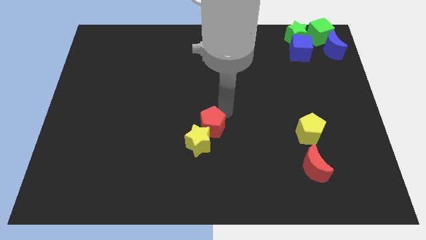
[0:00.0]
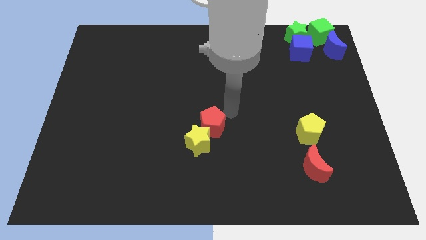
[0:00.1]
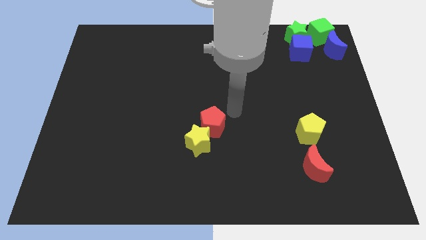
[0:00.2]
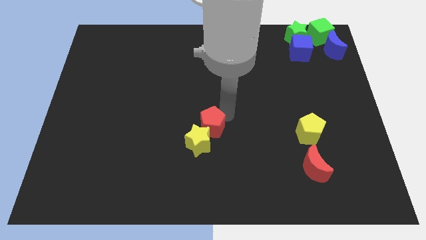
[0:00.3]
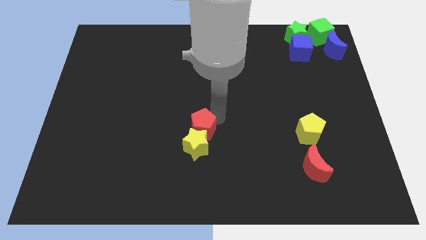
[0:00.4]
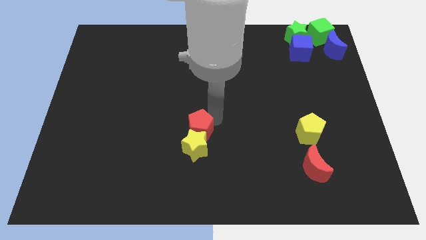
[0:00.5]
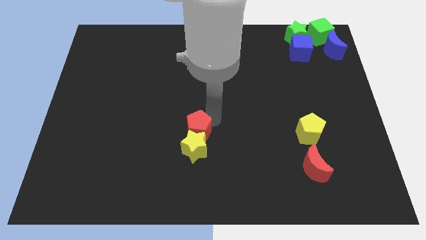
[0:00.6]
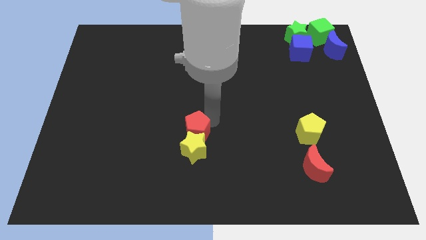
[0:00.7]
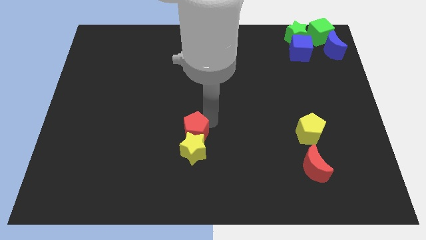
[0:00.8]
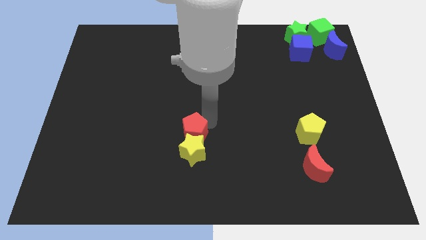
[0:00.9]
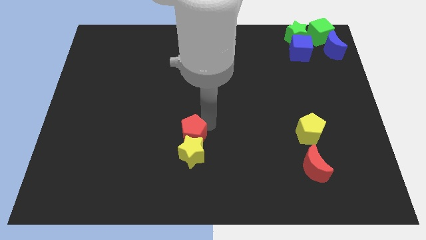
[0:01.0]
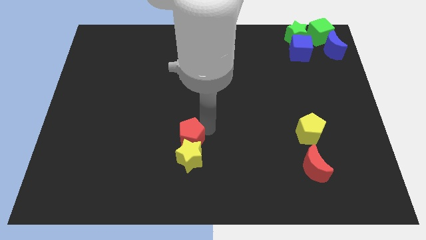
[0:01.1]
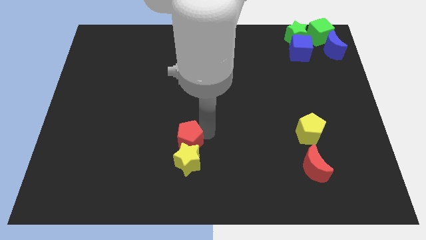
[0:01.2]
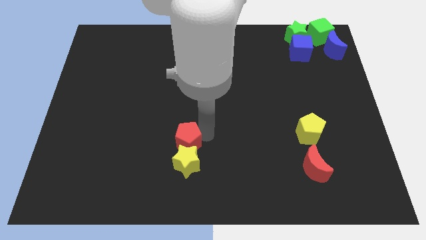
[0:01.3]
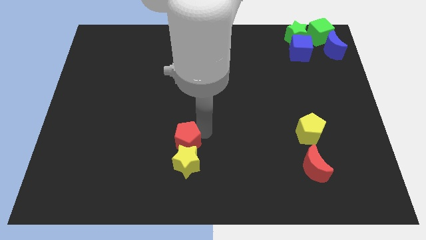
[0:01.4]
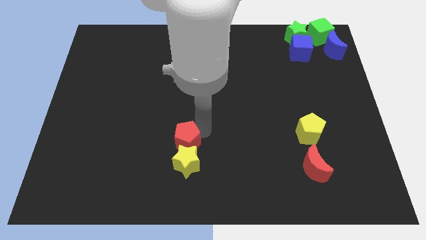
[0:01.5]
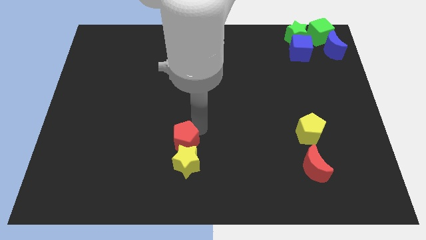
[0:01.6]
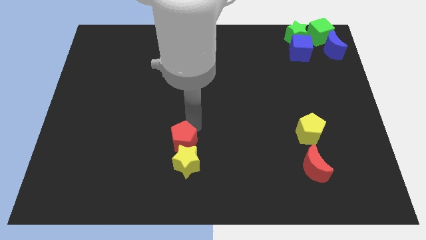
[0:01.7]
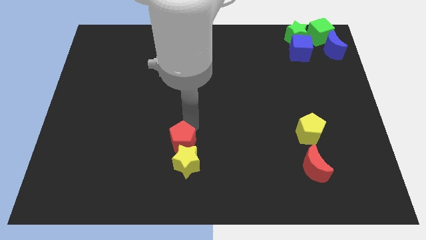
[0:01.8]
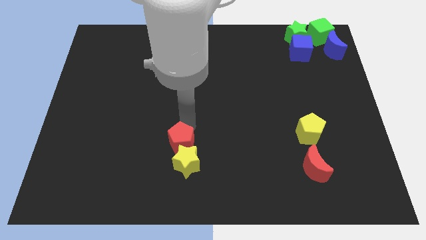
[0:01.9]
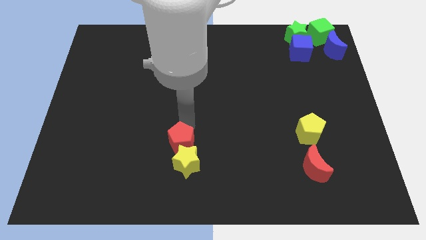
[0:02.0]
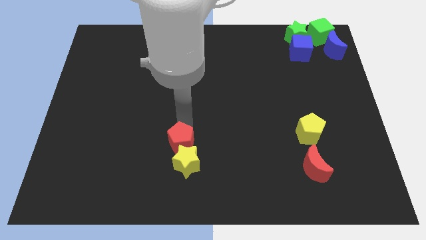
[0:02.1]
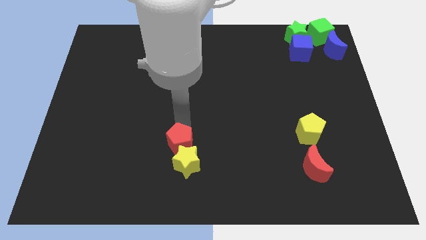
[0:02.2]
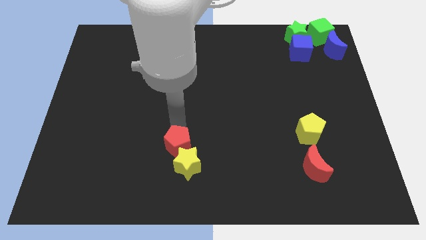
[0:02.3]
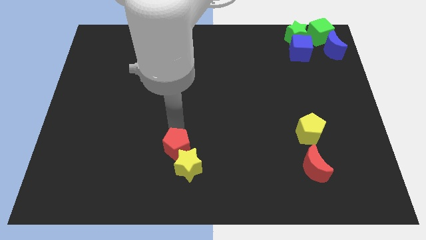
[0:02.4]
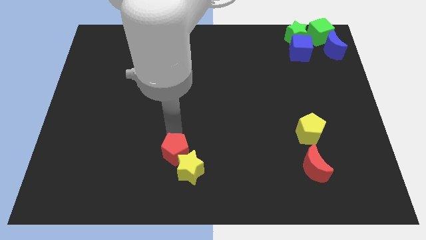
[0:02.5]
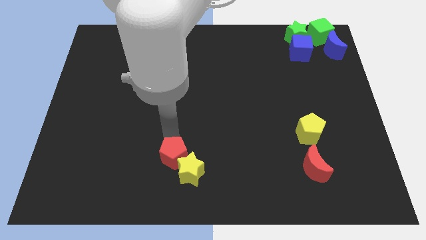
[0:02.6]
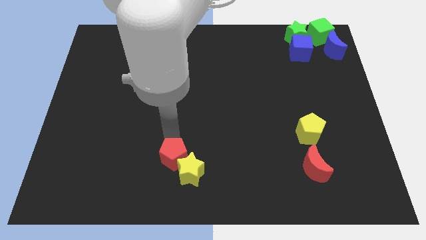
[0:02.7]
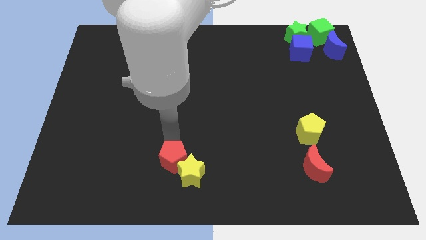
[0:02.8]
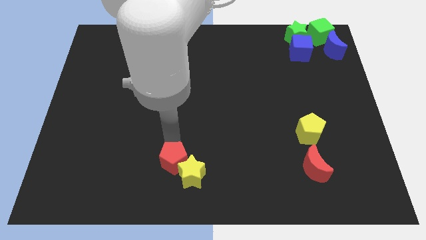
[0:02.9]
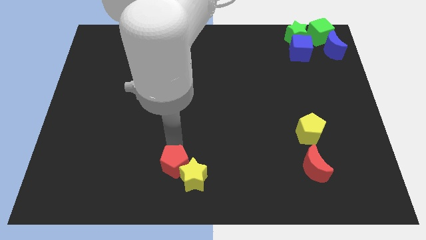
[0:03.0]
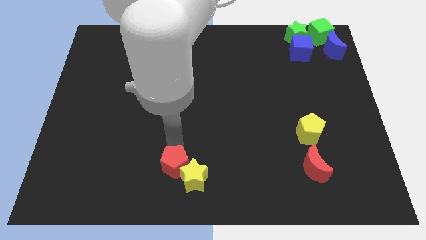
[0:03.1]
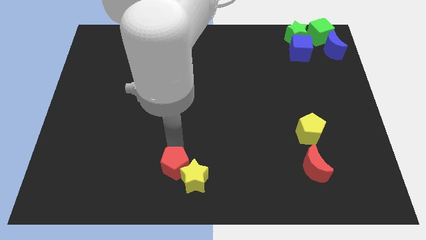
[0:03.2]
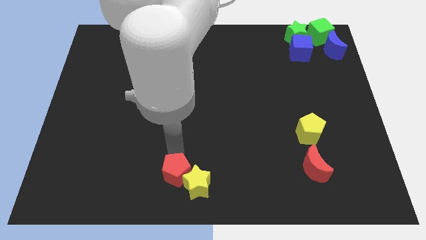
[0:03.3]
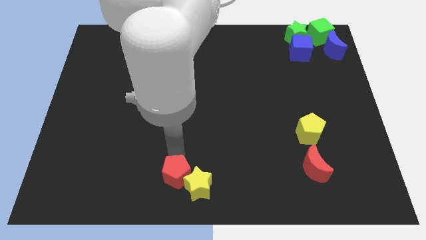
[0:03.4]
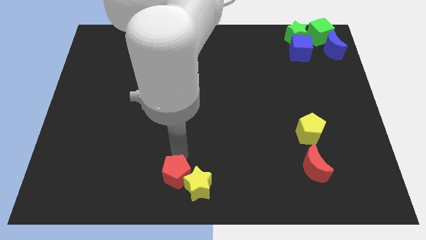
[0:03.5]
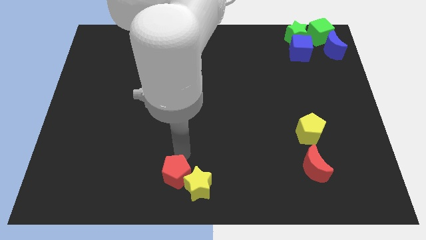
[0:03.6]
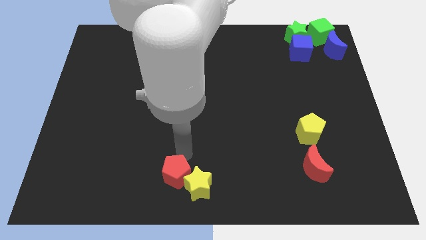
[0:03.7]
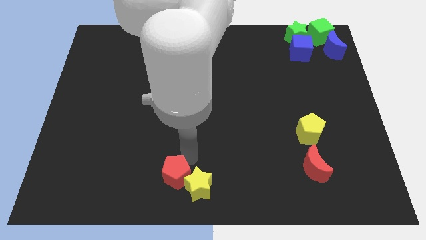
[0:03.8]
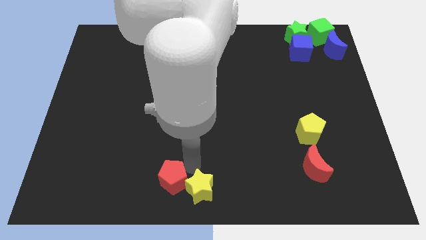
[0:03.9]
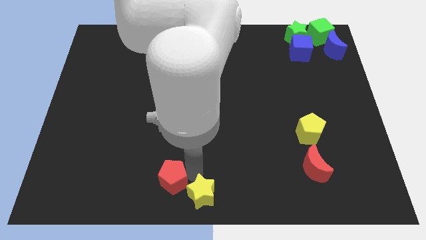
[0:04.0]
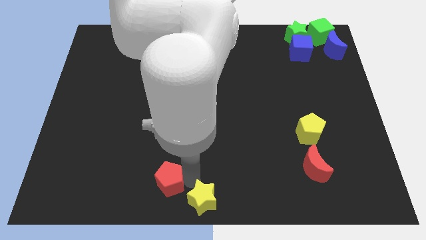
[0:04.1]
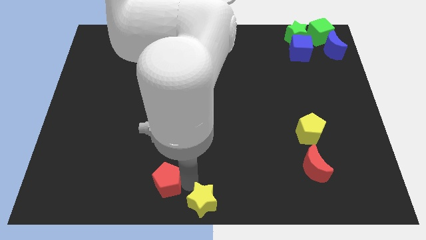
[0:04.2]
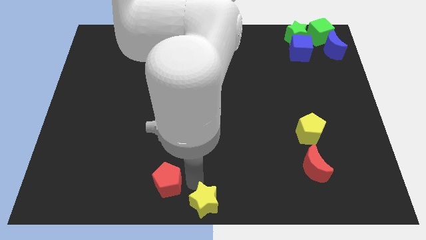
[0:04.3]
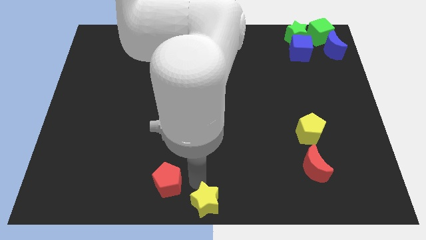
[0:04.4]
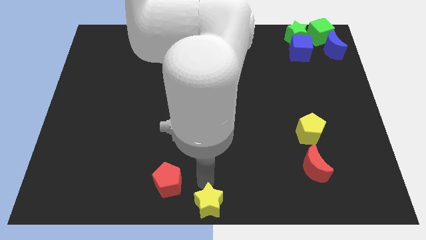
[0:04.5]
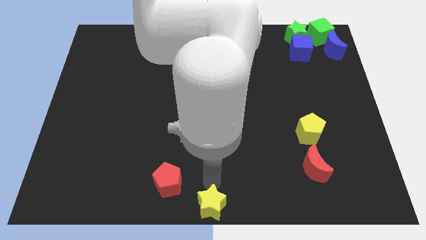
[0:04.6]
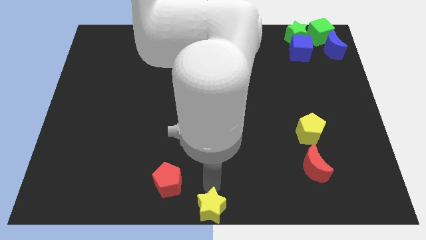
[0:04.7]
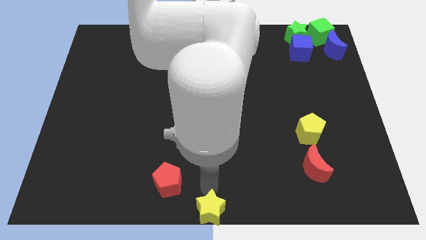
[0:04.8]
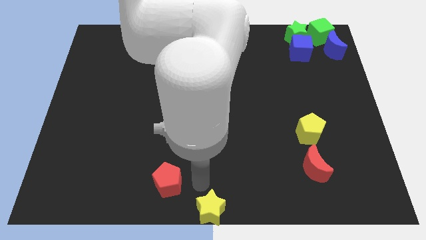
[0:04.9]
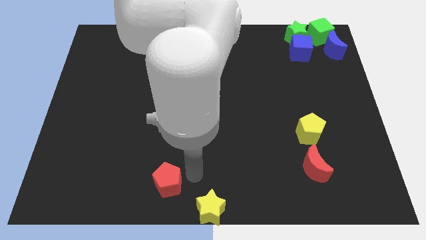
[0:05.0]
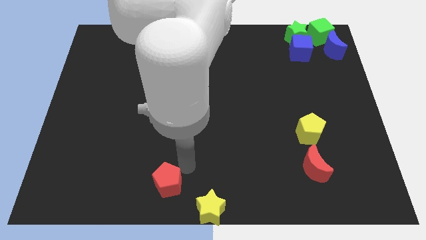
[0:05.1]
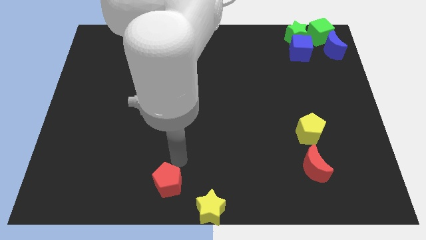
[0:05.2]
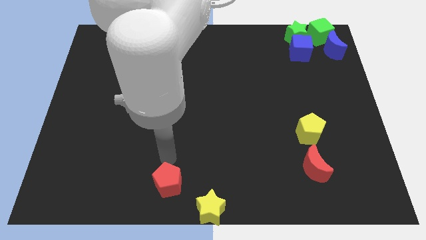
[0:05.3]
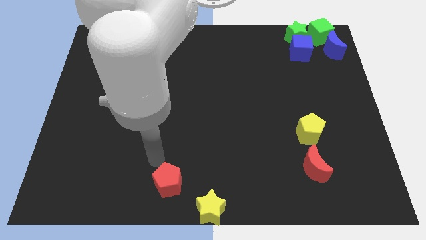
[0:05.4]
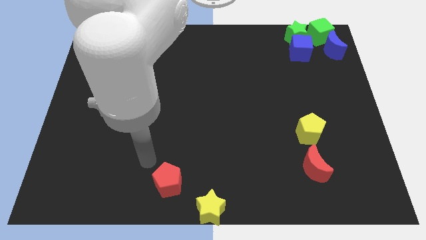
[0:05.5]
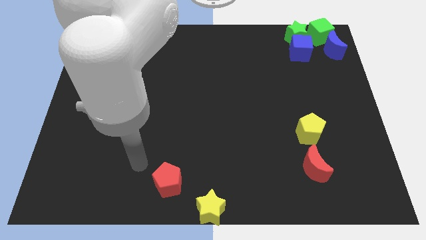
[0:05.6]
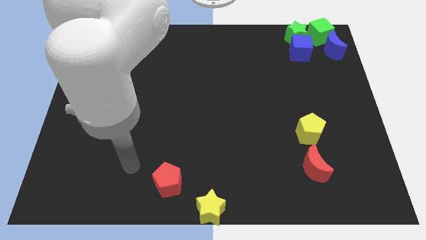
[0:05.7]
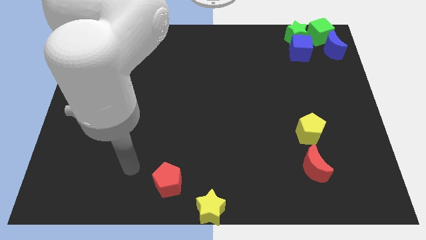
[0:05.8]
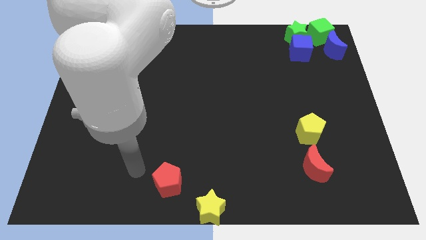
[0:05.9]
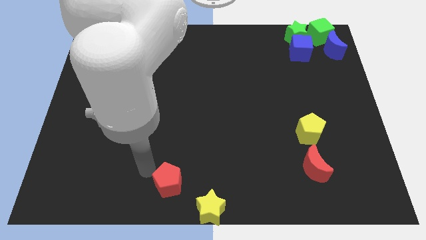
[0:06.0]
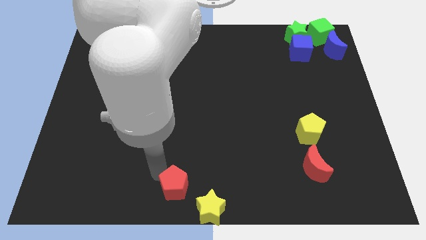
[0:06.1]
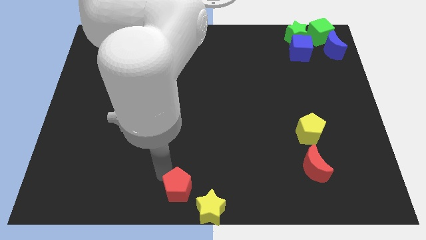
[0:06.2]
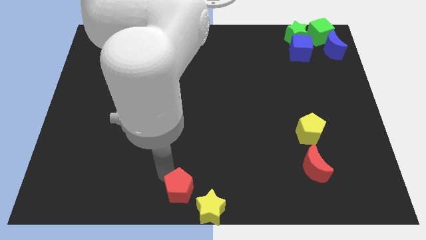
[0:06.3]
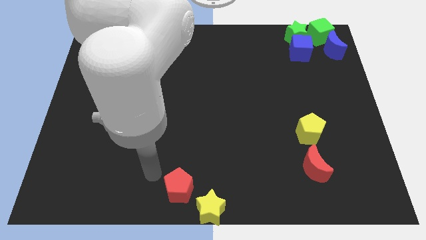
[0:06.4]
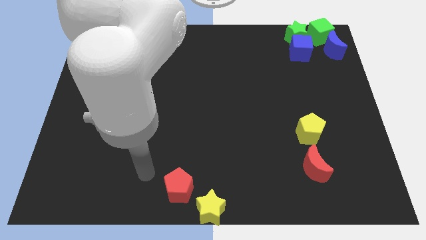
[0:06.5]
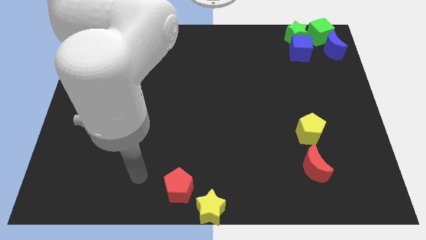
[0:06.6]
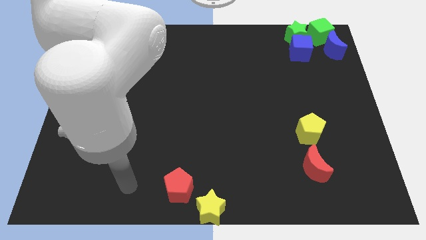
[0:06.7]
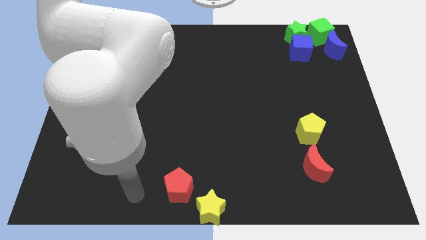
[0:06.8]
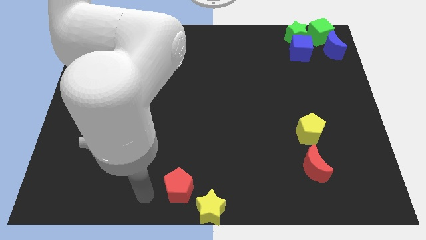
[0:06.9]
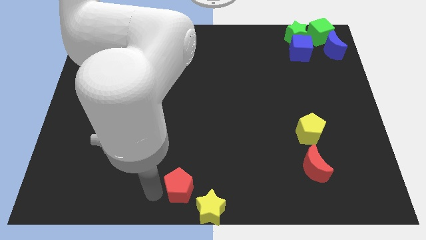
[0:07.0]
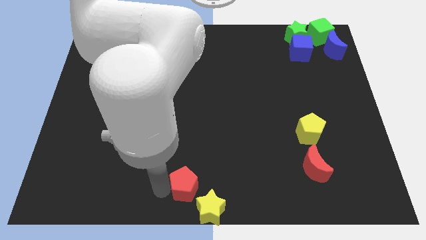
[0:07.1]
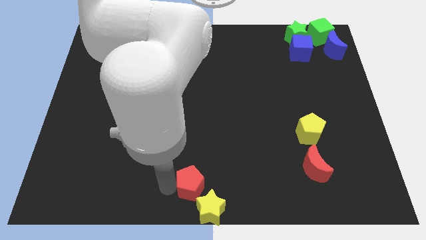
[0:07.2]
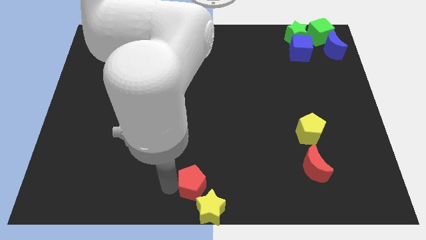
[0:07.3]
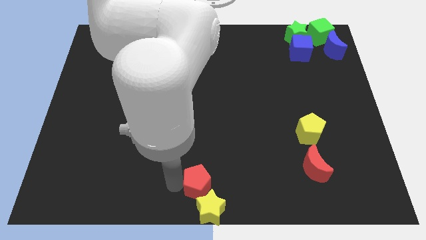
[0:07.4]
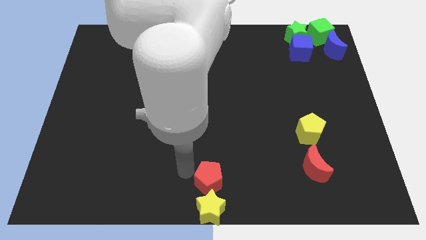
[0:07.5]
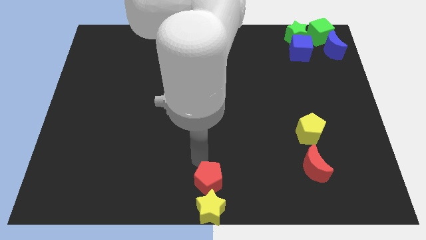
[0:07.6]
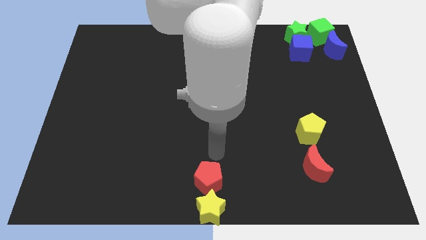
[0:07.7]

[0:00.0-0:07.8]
place the red pentagon and yellow star in a line vertically at the bottom center of the board

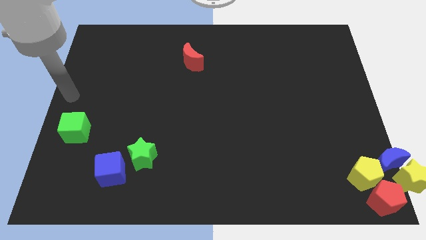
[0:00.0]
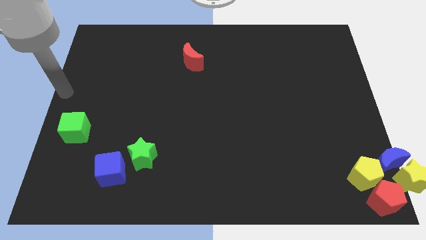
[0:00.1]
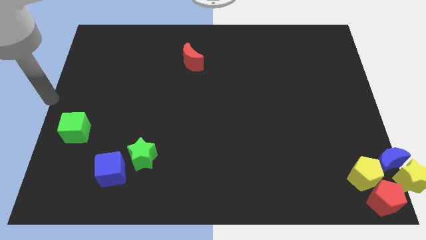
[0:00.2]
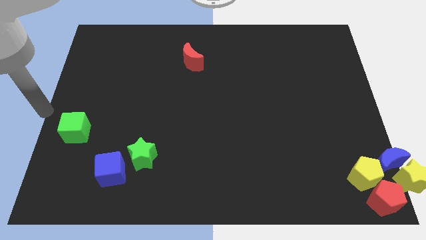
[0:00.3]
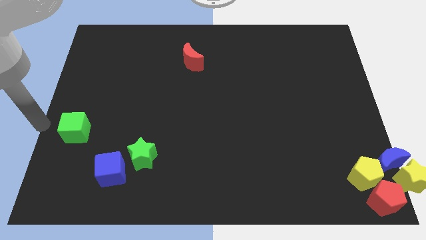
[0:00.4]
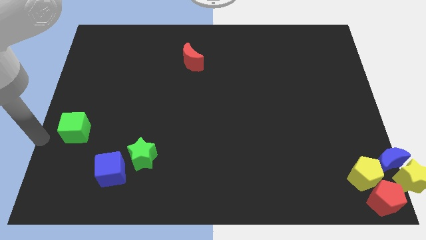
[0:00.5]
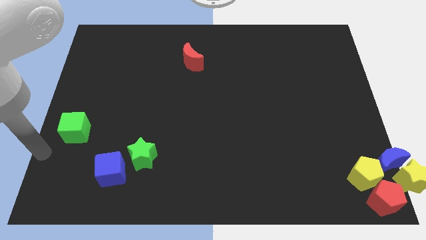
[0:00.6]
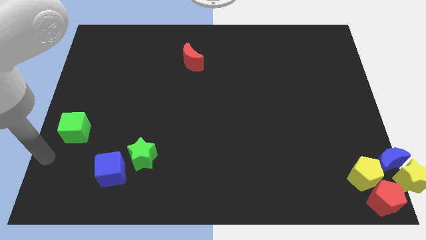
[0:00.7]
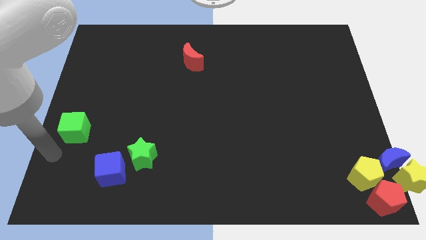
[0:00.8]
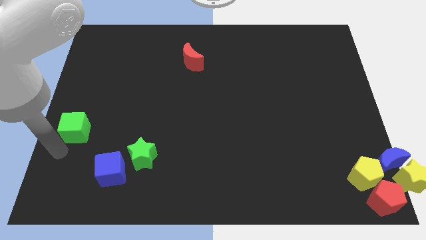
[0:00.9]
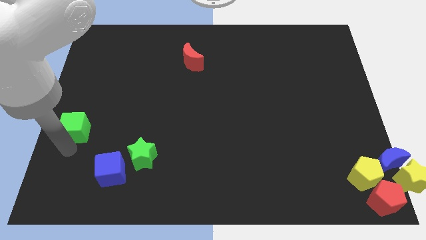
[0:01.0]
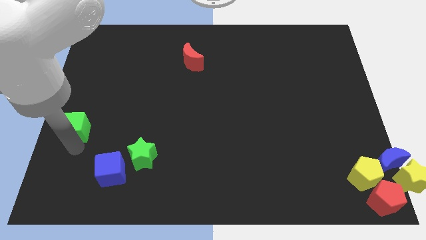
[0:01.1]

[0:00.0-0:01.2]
move your arm below the green cube
